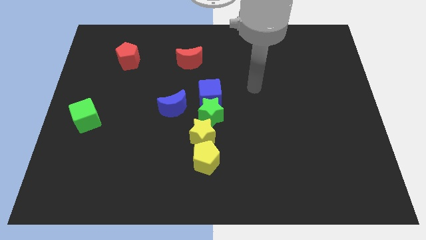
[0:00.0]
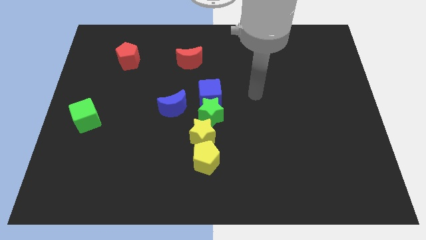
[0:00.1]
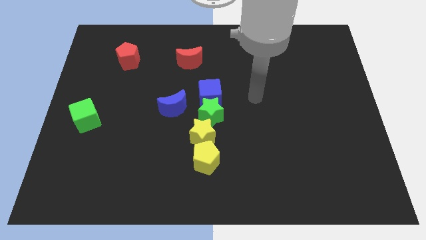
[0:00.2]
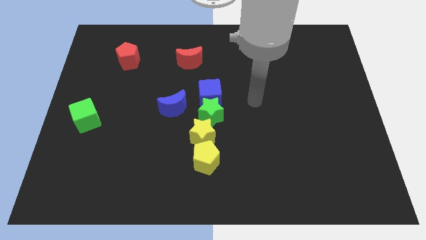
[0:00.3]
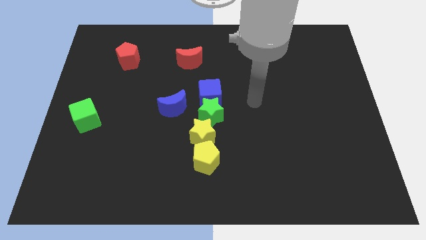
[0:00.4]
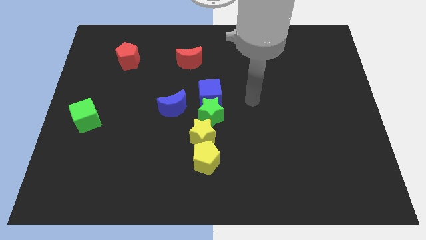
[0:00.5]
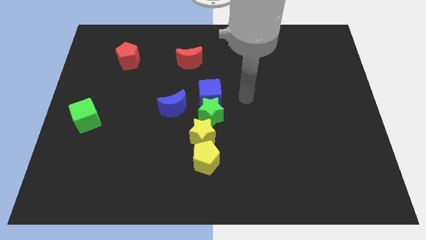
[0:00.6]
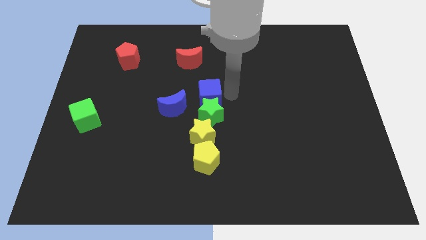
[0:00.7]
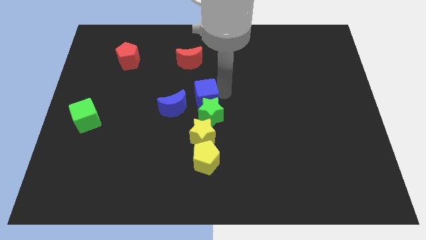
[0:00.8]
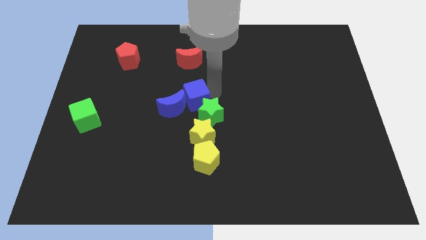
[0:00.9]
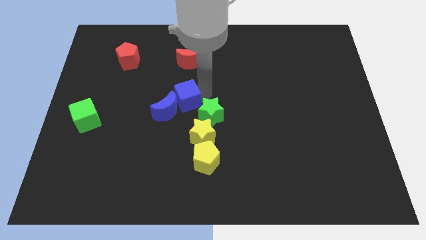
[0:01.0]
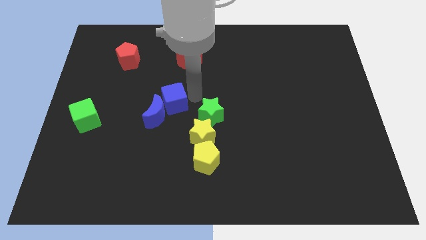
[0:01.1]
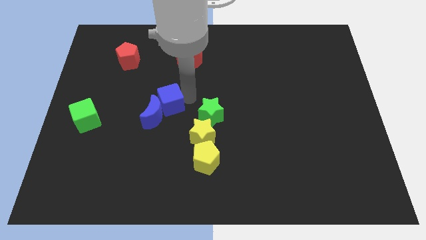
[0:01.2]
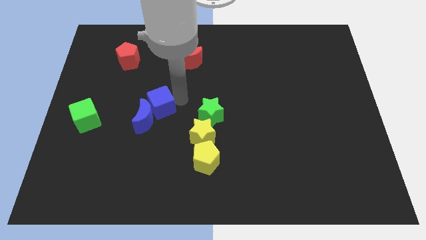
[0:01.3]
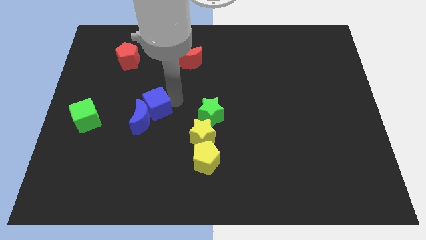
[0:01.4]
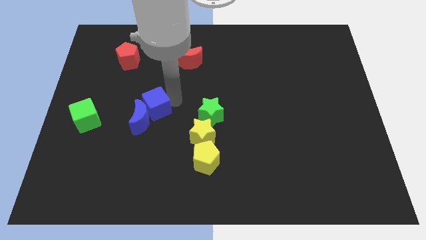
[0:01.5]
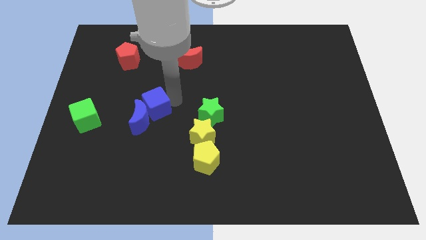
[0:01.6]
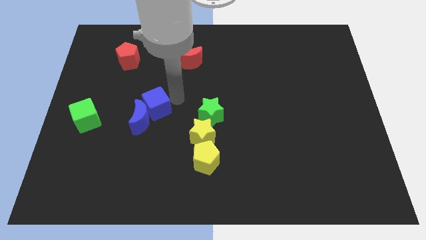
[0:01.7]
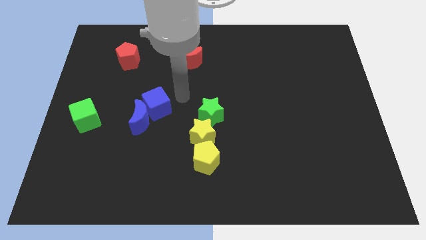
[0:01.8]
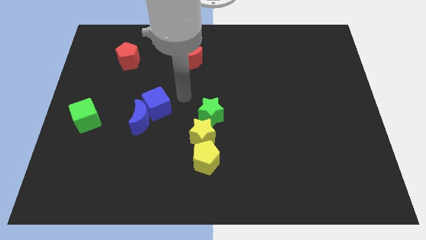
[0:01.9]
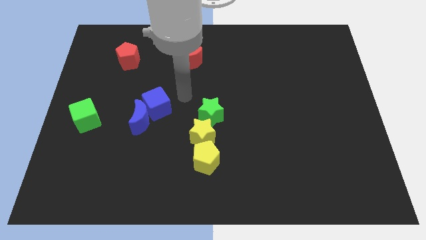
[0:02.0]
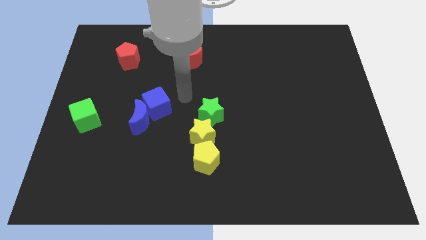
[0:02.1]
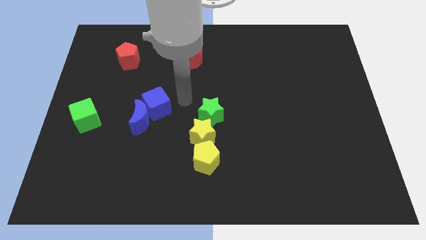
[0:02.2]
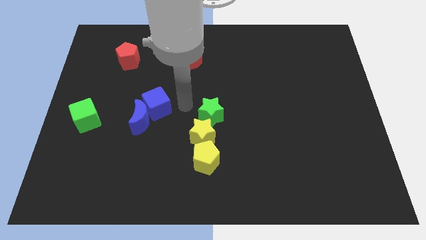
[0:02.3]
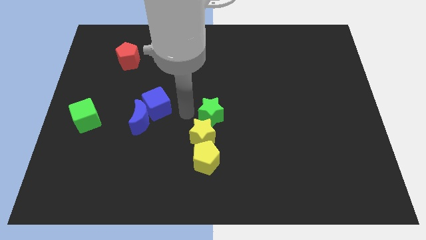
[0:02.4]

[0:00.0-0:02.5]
make the blue cube to touch the blue crescent

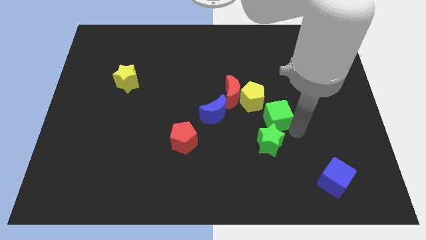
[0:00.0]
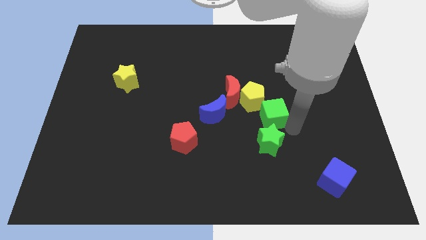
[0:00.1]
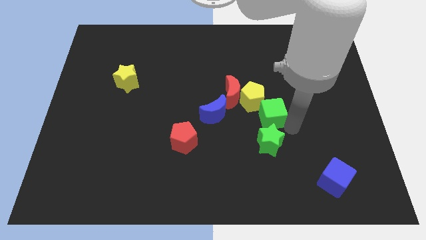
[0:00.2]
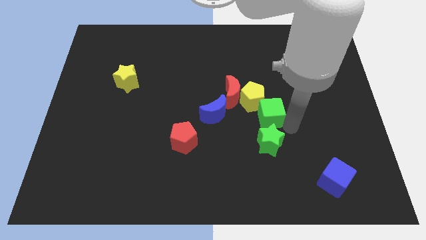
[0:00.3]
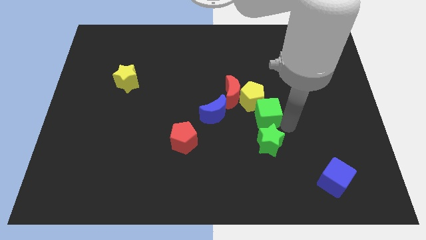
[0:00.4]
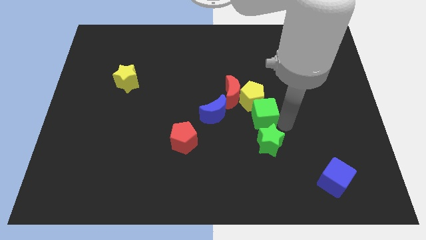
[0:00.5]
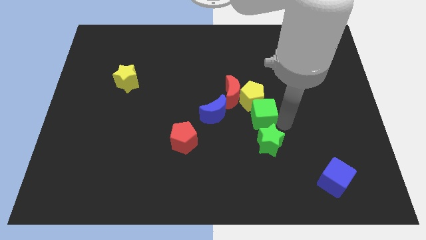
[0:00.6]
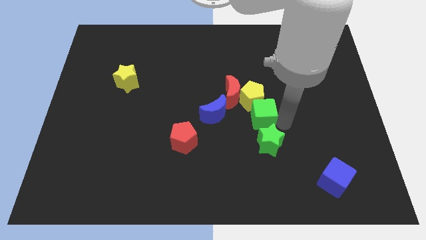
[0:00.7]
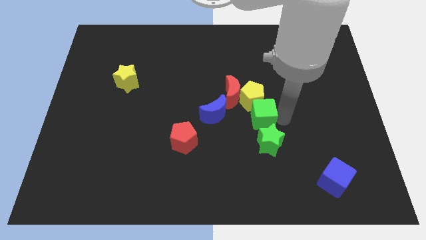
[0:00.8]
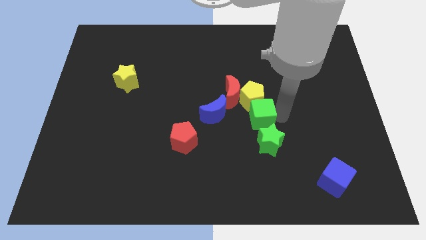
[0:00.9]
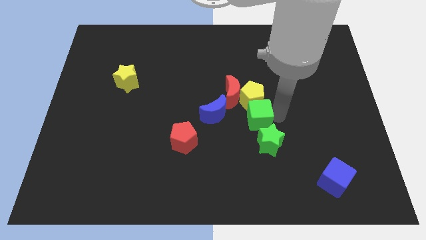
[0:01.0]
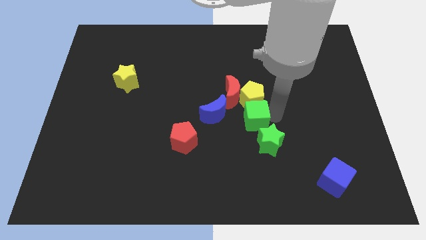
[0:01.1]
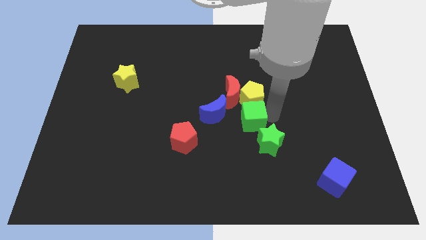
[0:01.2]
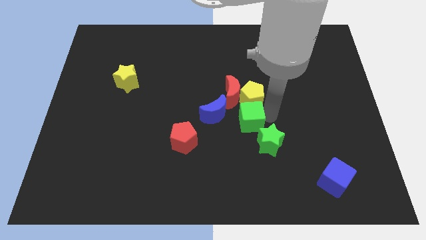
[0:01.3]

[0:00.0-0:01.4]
push the green cube to the bottom of the yellow pentagon

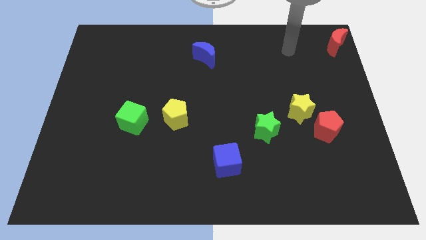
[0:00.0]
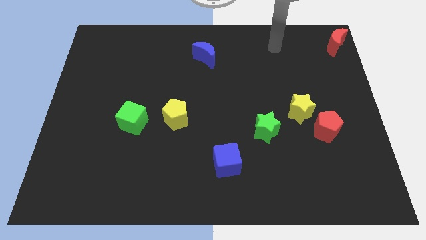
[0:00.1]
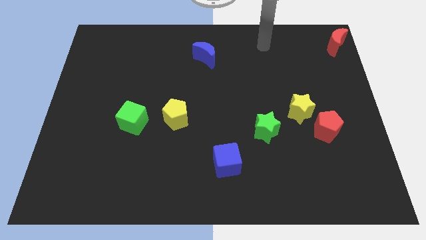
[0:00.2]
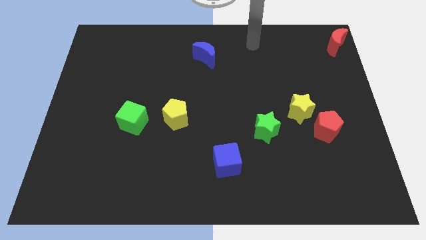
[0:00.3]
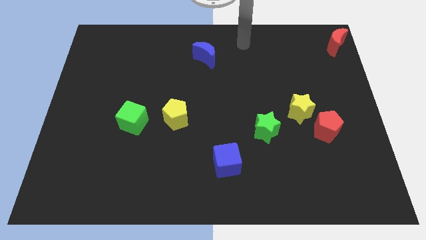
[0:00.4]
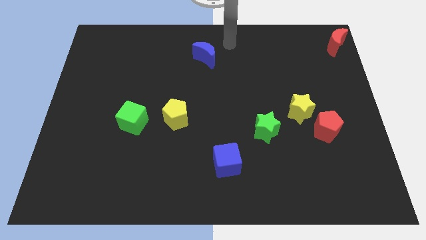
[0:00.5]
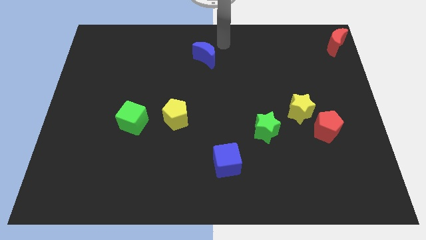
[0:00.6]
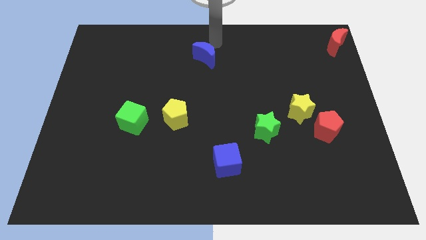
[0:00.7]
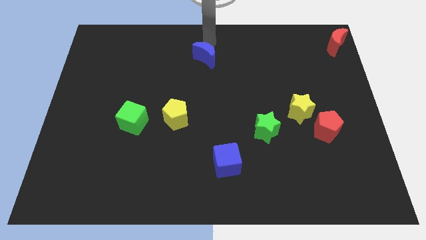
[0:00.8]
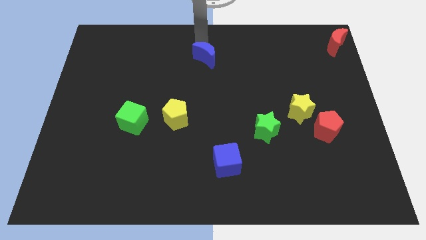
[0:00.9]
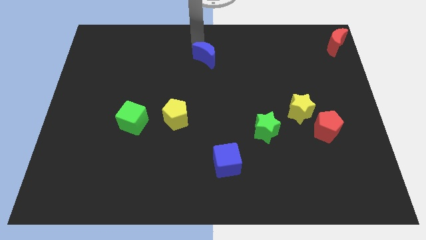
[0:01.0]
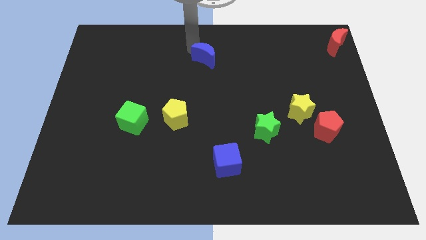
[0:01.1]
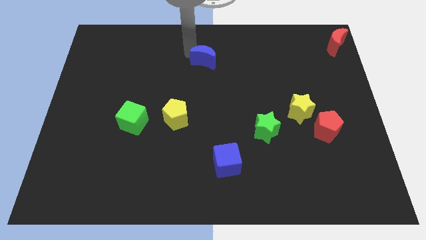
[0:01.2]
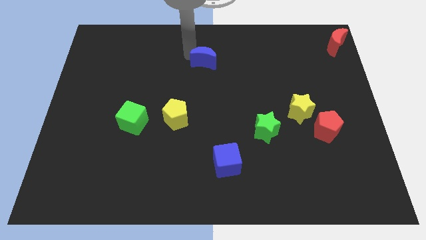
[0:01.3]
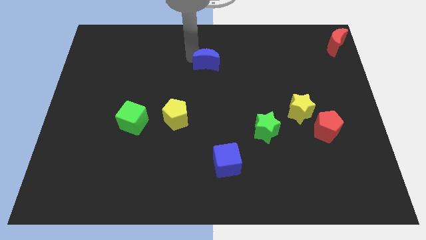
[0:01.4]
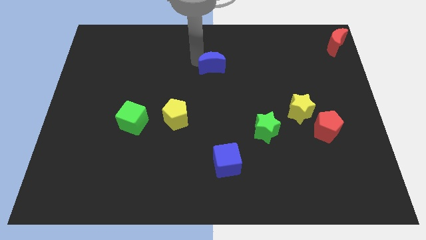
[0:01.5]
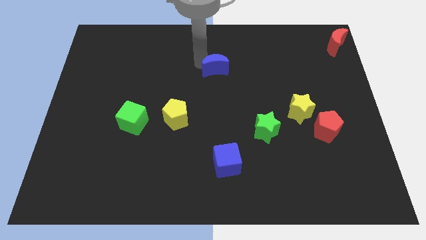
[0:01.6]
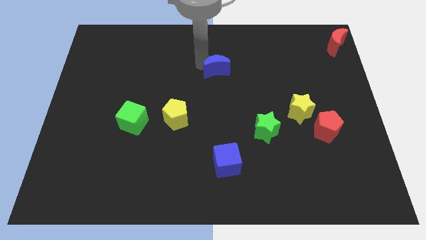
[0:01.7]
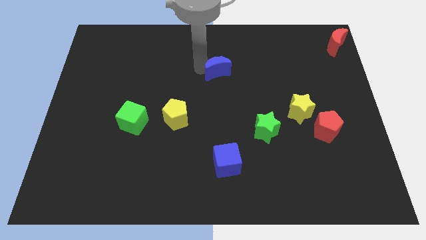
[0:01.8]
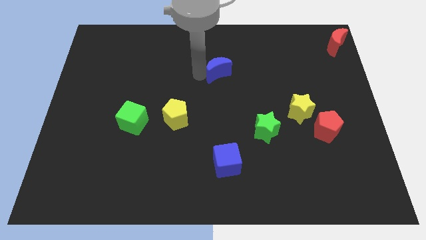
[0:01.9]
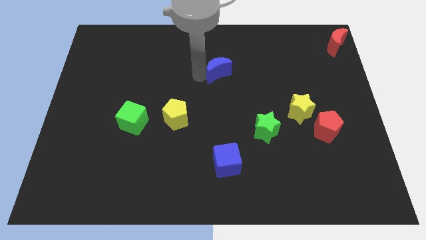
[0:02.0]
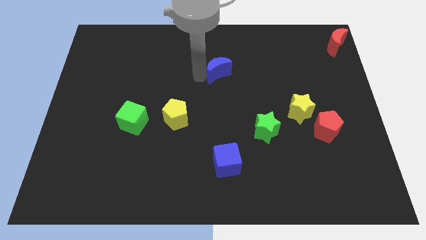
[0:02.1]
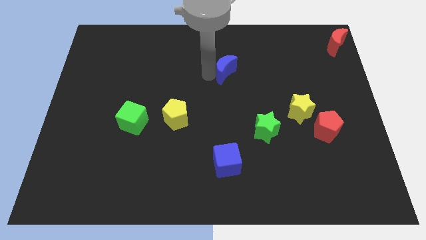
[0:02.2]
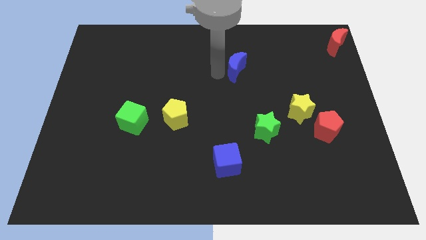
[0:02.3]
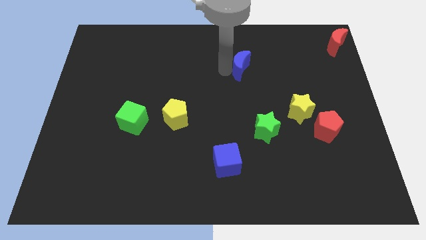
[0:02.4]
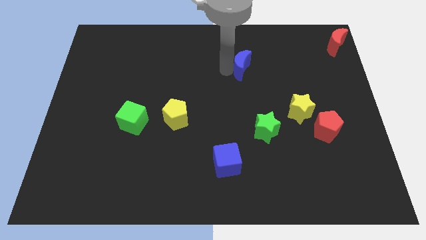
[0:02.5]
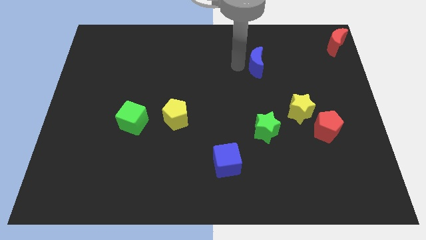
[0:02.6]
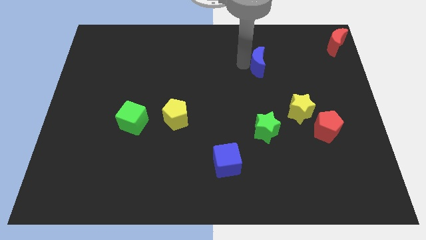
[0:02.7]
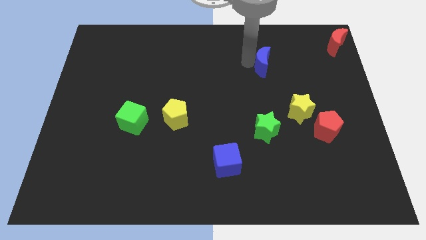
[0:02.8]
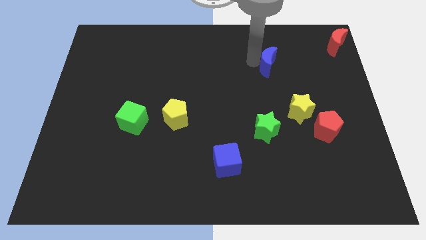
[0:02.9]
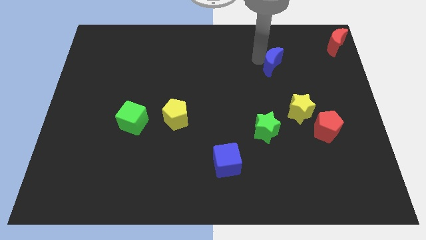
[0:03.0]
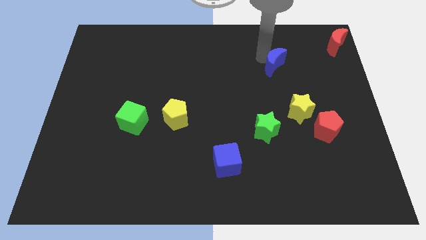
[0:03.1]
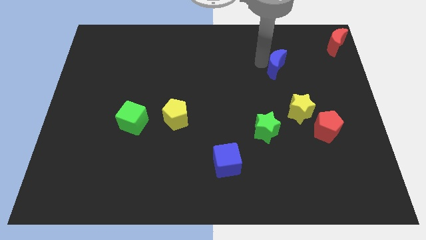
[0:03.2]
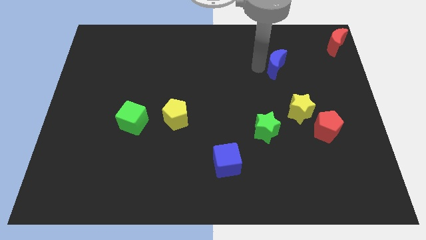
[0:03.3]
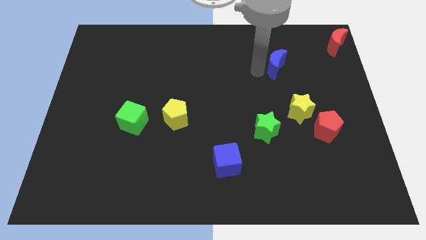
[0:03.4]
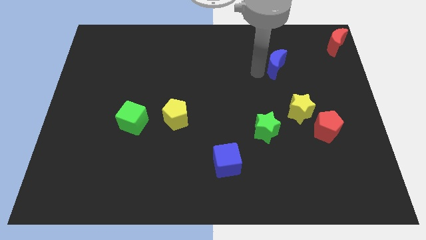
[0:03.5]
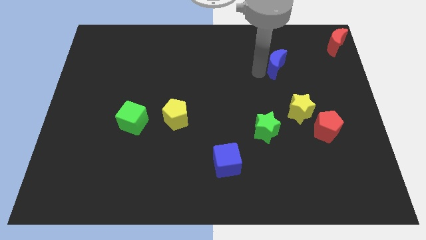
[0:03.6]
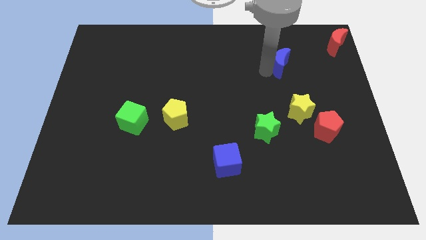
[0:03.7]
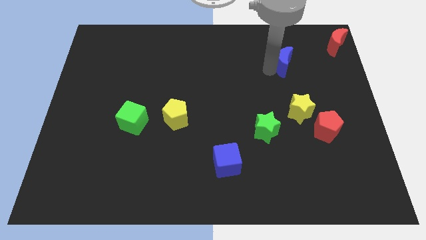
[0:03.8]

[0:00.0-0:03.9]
place the blue moon diagonally top right to green star

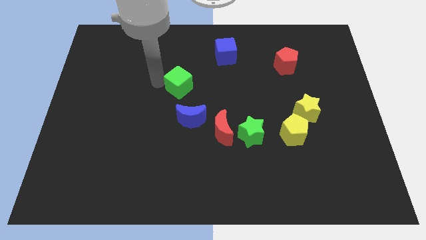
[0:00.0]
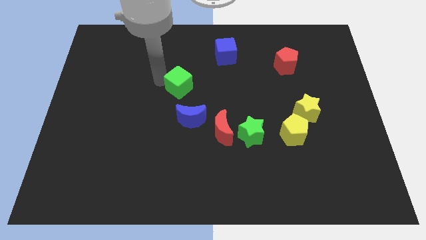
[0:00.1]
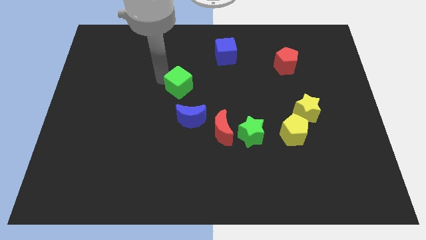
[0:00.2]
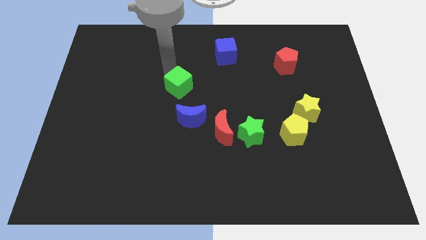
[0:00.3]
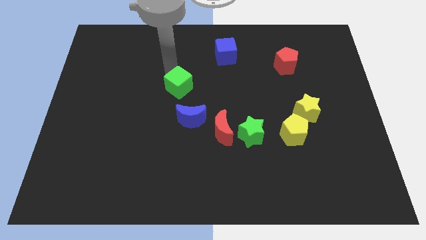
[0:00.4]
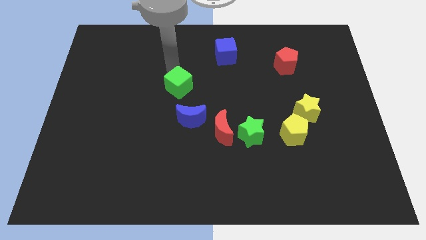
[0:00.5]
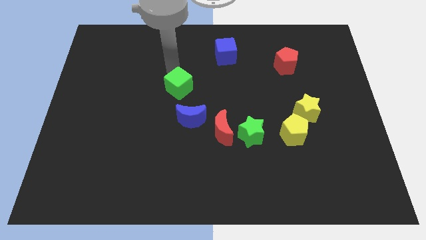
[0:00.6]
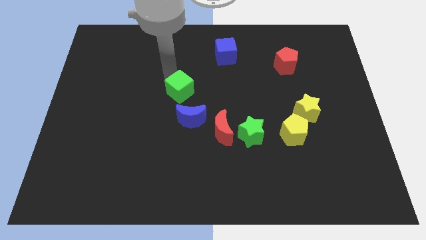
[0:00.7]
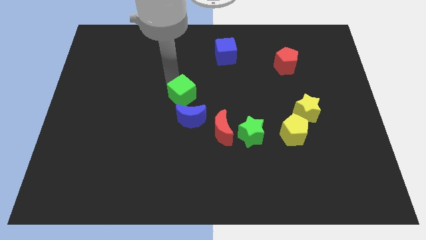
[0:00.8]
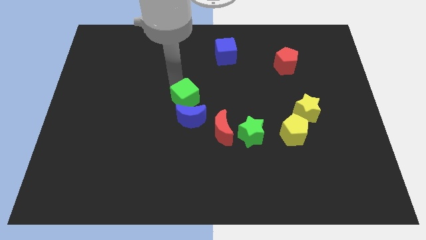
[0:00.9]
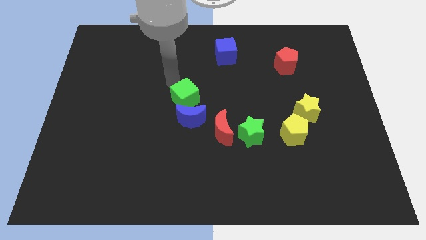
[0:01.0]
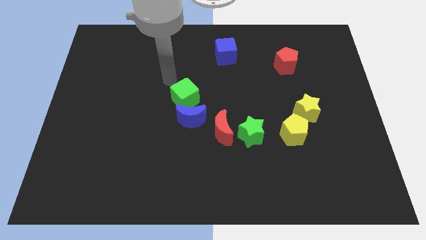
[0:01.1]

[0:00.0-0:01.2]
slide green cube into blue moon
